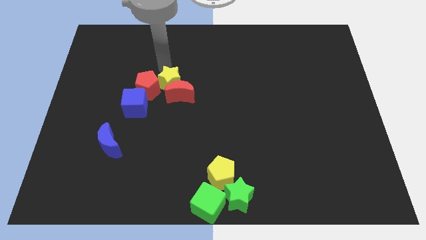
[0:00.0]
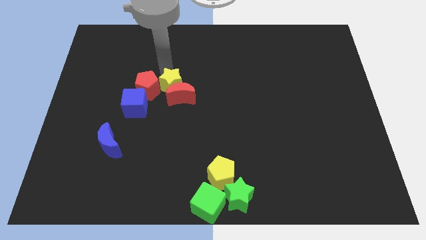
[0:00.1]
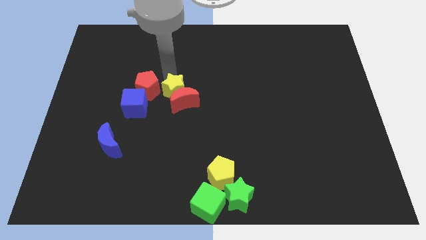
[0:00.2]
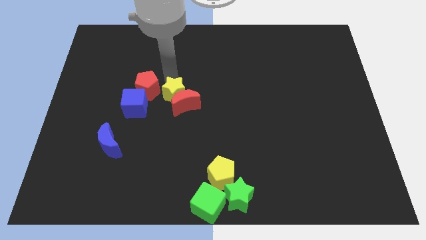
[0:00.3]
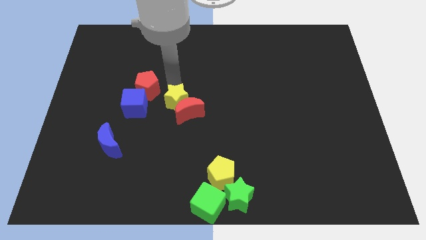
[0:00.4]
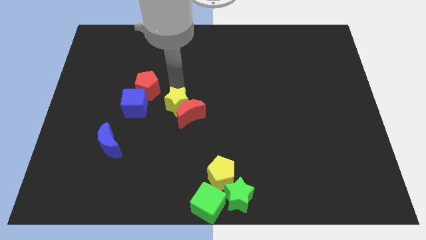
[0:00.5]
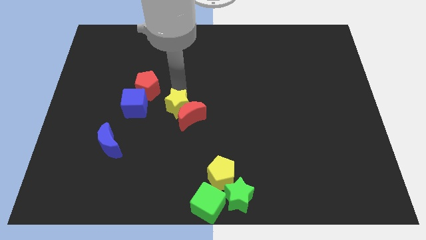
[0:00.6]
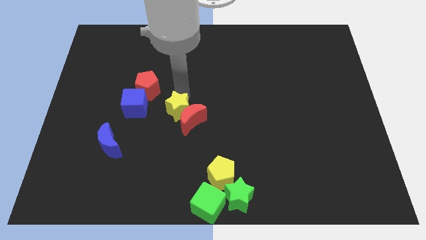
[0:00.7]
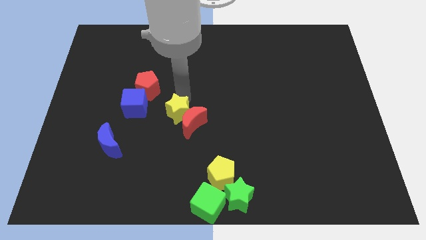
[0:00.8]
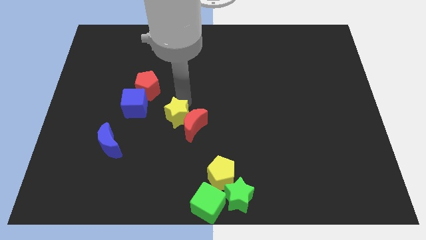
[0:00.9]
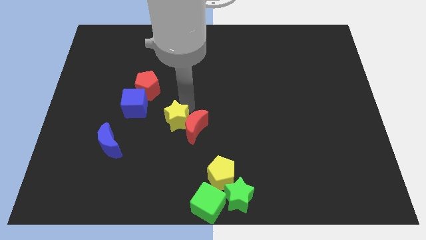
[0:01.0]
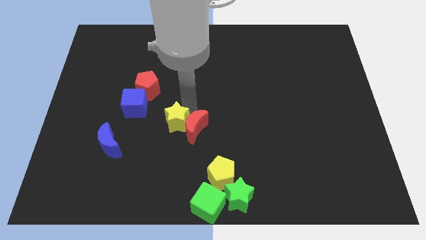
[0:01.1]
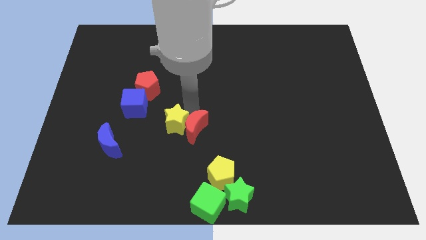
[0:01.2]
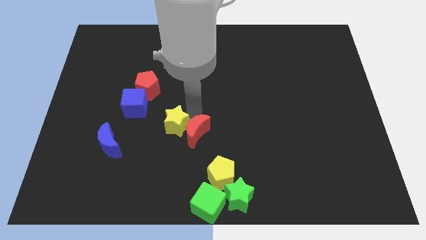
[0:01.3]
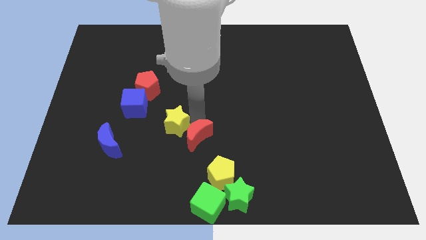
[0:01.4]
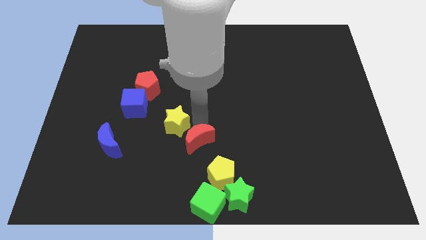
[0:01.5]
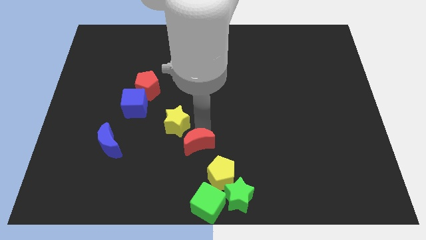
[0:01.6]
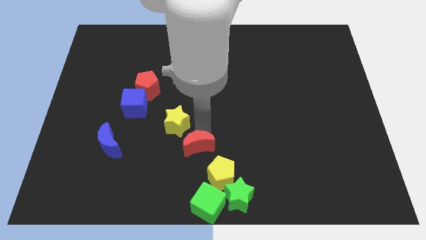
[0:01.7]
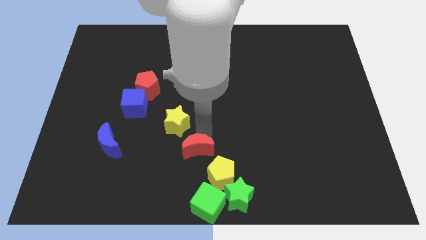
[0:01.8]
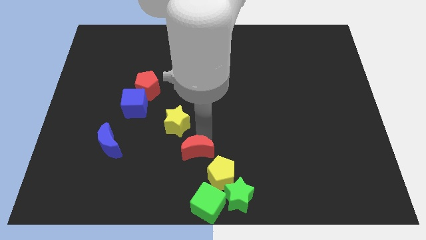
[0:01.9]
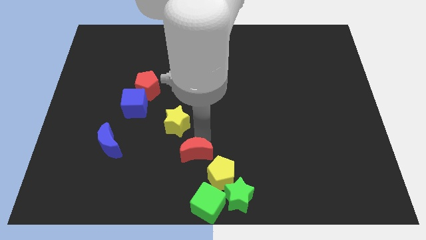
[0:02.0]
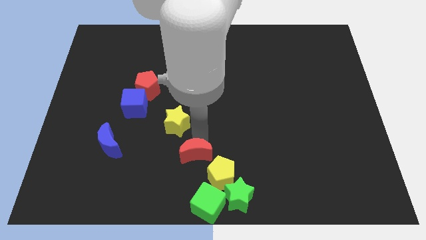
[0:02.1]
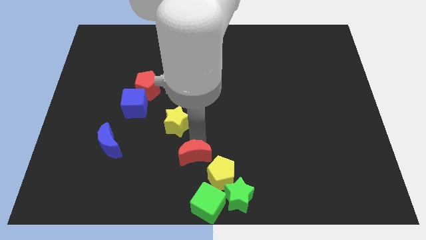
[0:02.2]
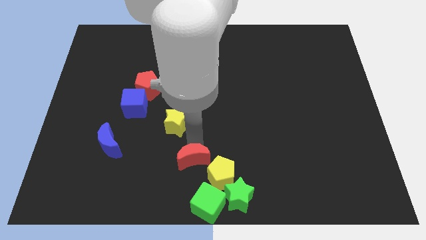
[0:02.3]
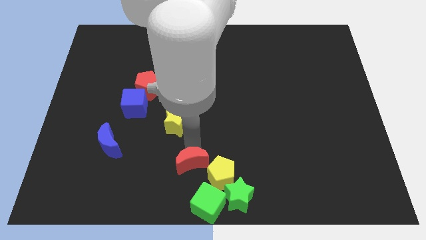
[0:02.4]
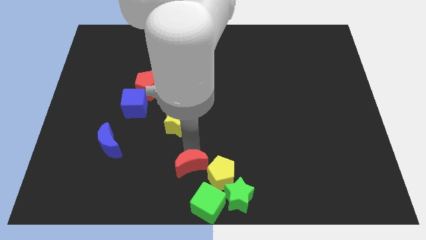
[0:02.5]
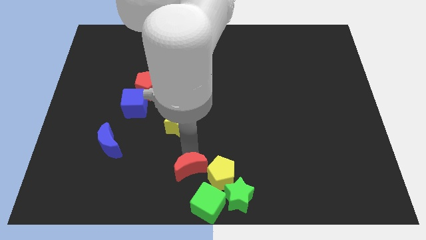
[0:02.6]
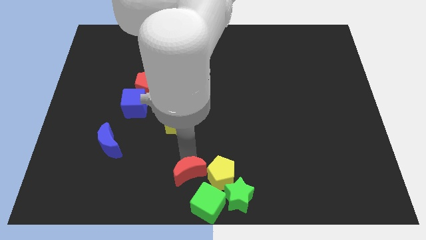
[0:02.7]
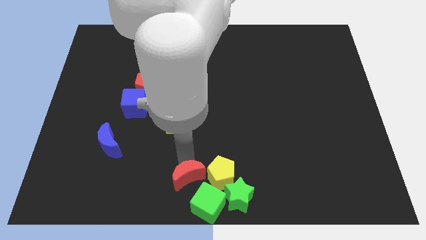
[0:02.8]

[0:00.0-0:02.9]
push the red crescent to the top of the green cube from the top along with the yellow star

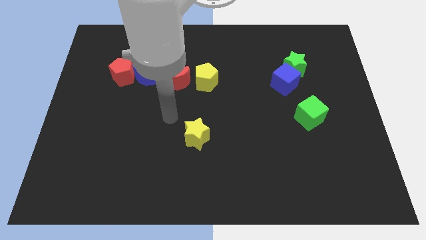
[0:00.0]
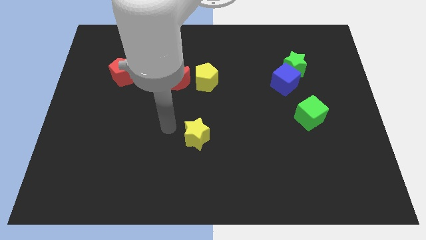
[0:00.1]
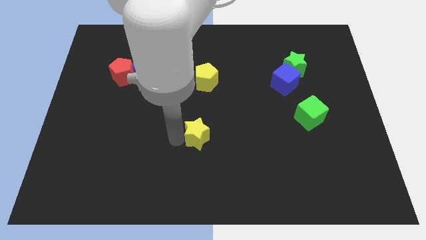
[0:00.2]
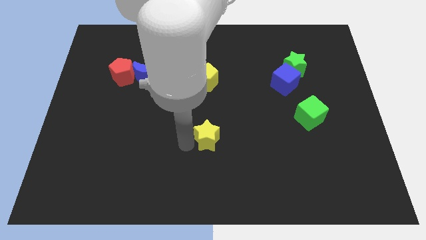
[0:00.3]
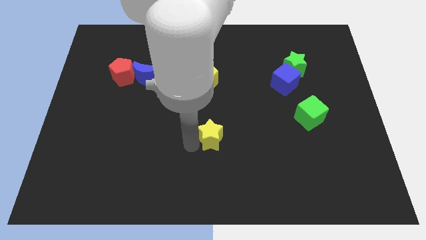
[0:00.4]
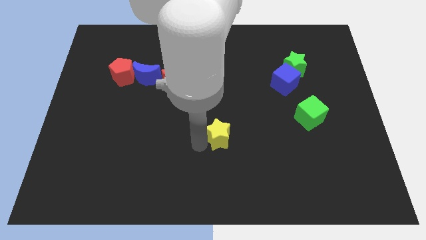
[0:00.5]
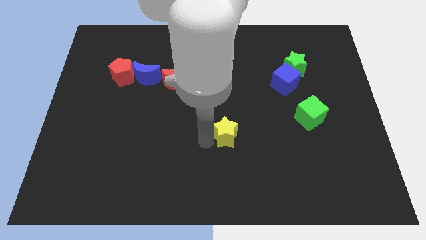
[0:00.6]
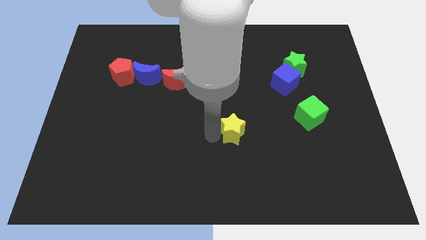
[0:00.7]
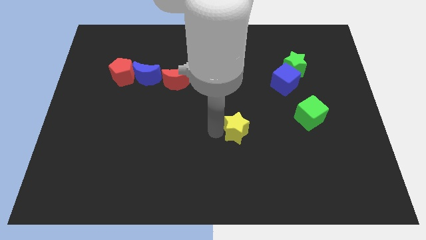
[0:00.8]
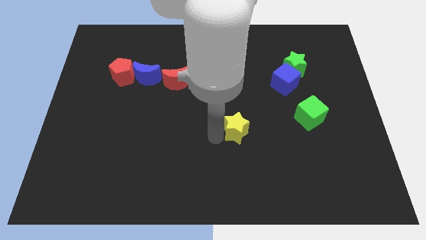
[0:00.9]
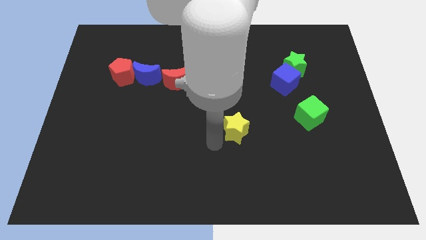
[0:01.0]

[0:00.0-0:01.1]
place the yellow star to the left of the green cube

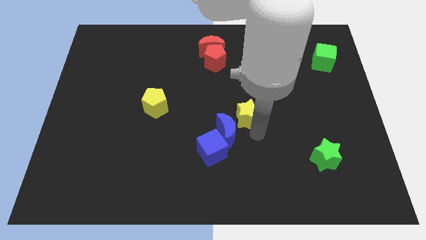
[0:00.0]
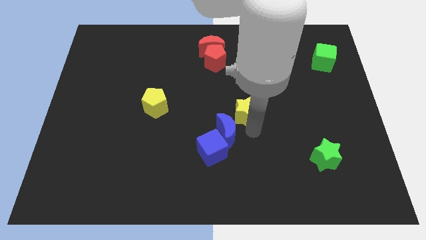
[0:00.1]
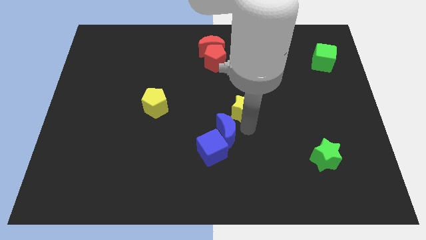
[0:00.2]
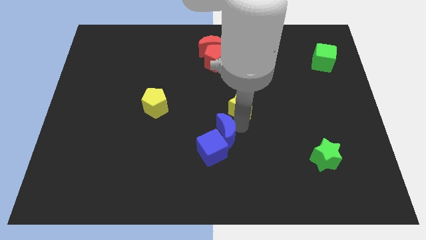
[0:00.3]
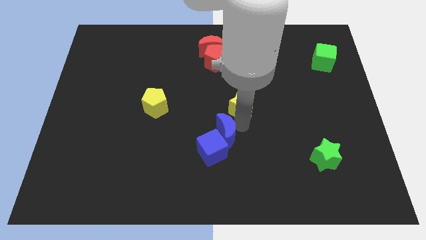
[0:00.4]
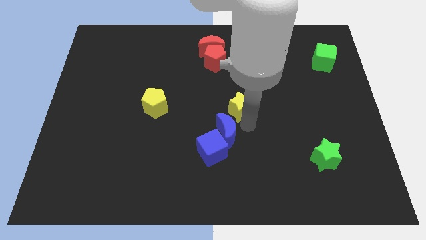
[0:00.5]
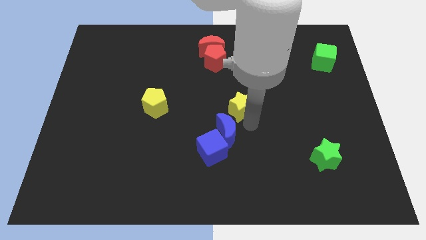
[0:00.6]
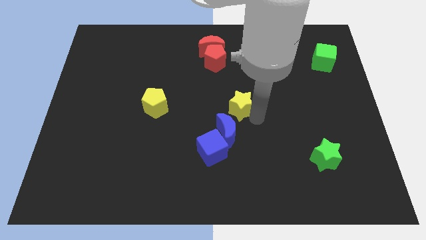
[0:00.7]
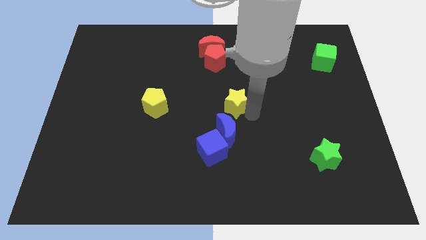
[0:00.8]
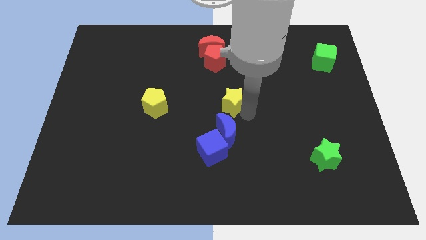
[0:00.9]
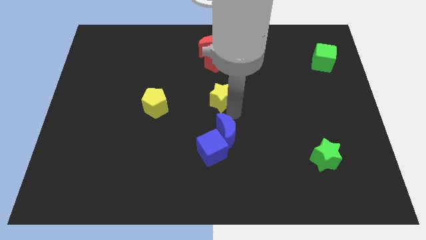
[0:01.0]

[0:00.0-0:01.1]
move the yellow star to the top side of the blue crescent

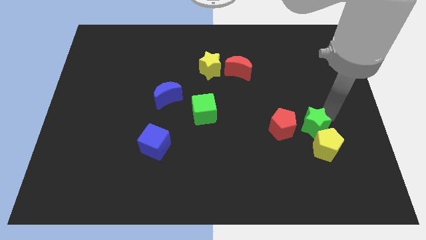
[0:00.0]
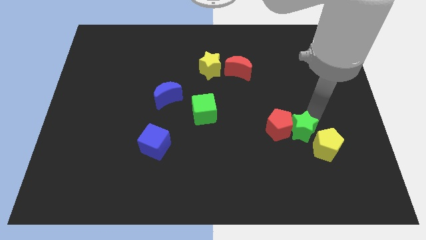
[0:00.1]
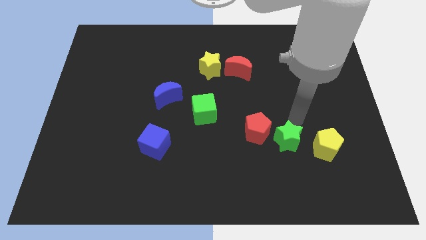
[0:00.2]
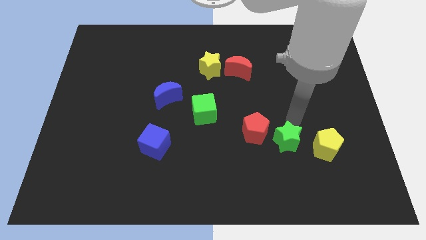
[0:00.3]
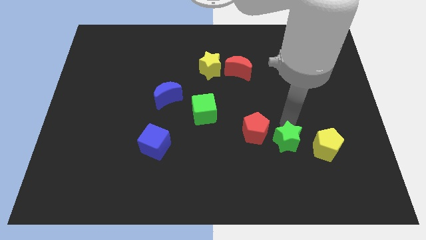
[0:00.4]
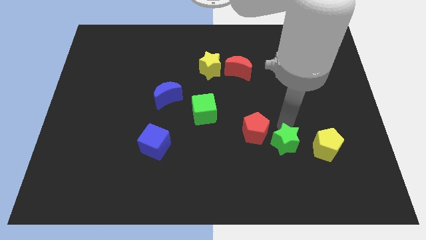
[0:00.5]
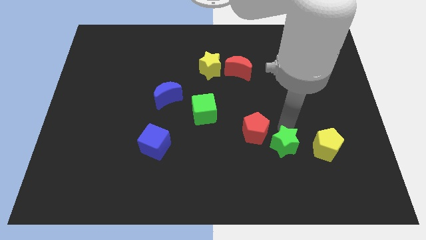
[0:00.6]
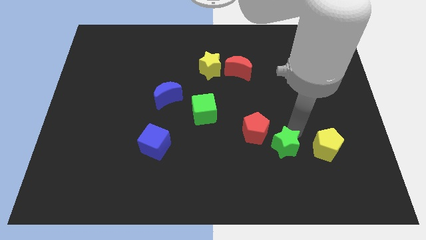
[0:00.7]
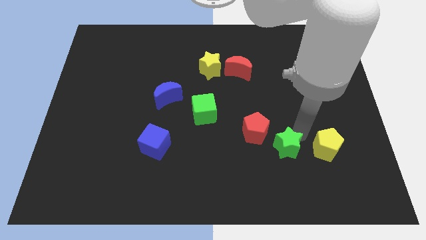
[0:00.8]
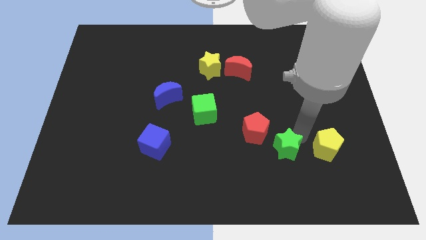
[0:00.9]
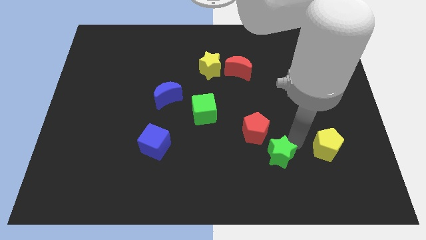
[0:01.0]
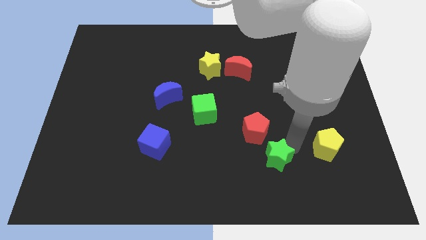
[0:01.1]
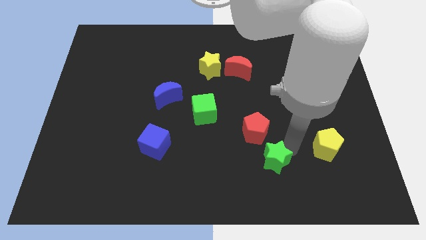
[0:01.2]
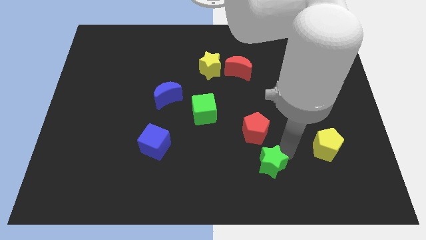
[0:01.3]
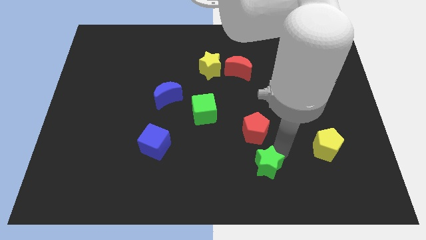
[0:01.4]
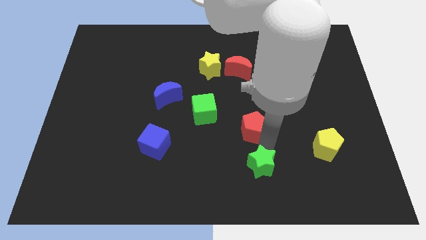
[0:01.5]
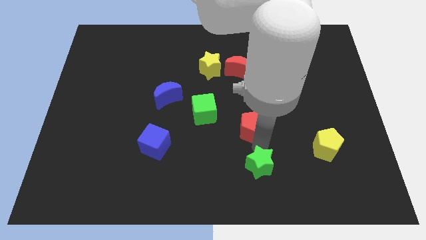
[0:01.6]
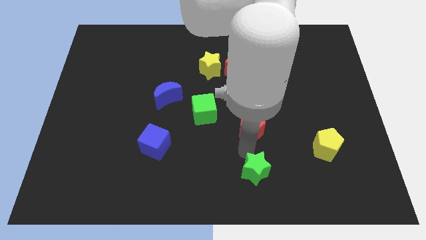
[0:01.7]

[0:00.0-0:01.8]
push the green star vertically below the red pentagon

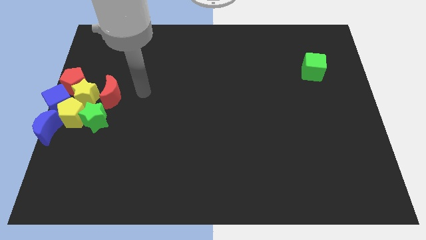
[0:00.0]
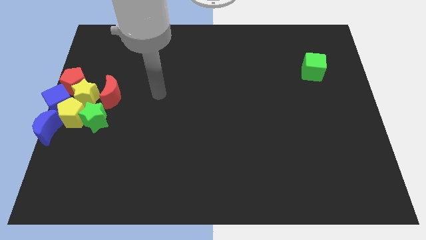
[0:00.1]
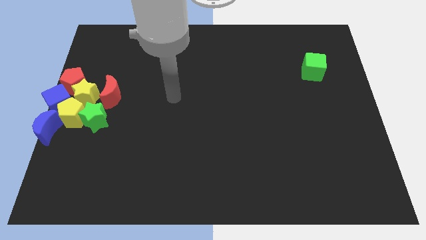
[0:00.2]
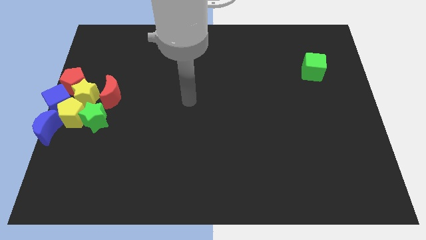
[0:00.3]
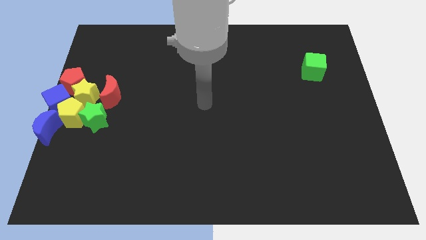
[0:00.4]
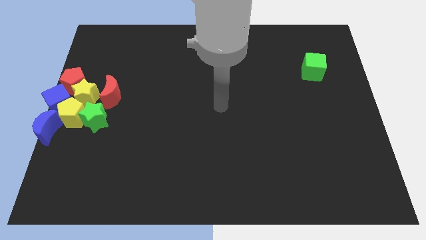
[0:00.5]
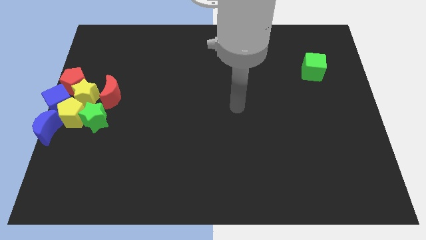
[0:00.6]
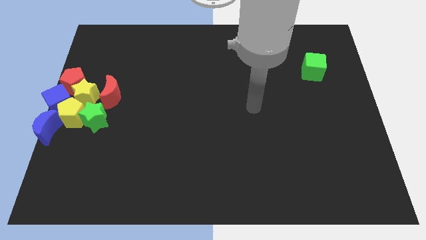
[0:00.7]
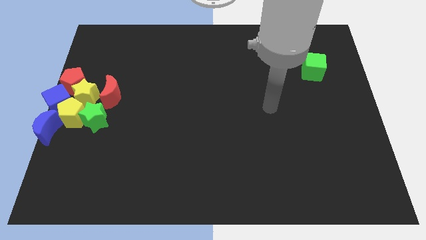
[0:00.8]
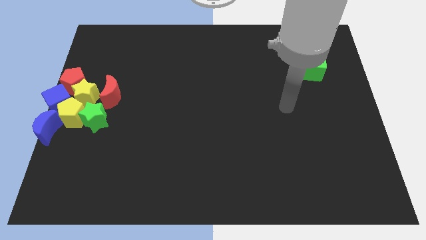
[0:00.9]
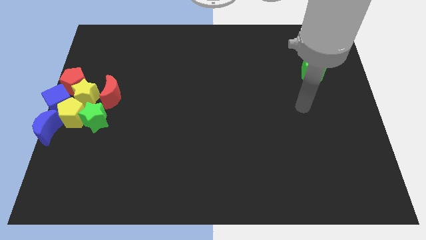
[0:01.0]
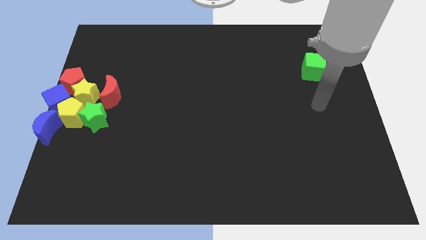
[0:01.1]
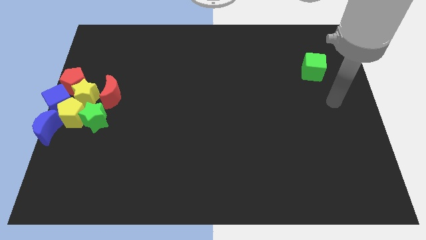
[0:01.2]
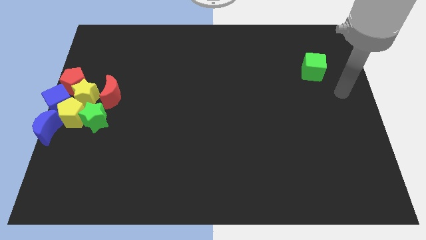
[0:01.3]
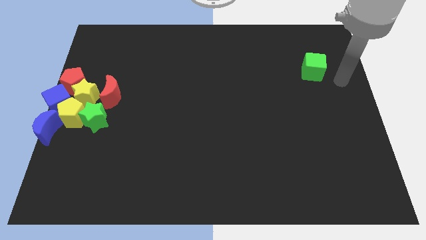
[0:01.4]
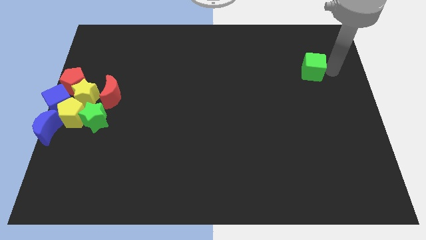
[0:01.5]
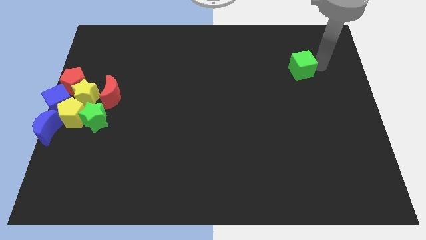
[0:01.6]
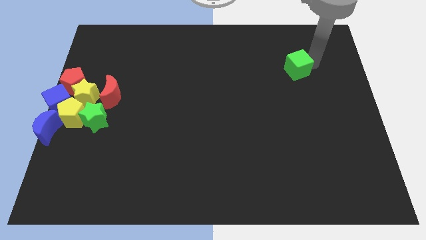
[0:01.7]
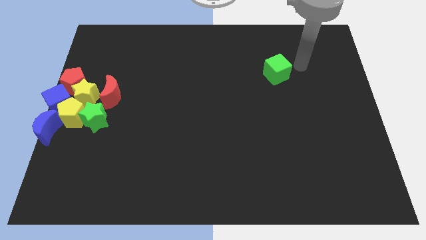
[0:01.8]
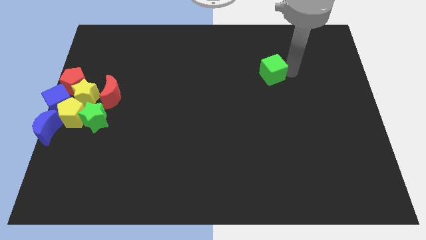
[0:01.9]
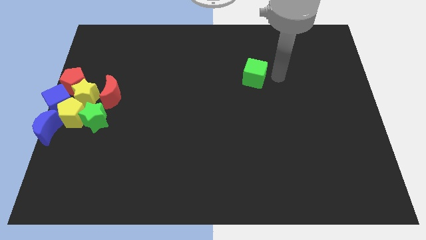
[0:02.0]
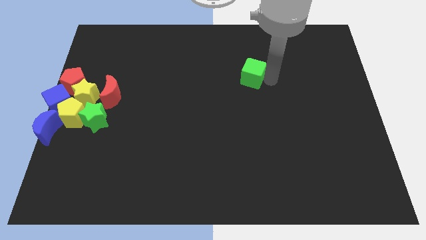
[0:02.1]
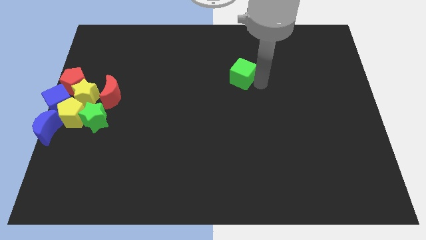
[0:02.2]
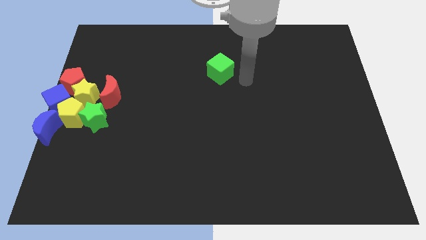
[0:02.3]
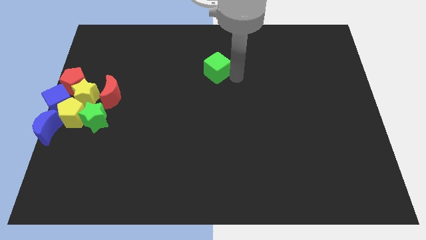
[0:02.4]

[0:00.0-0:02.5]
move the green cube to the top centre of the board
